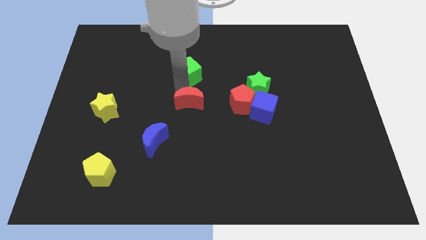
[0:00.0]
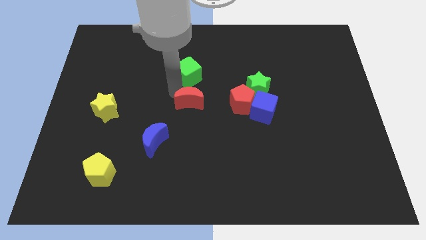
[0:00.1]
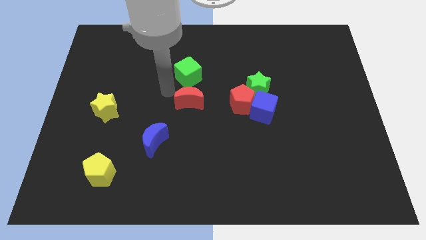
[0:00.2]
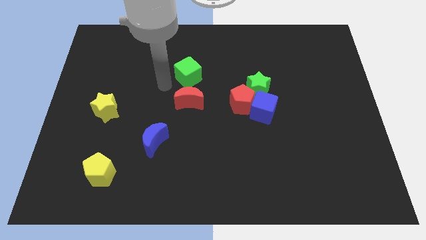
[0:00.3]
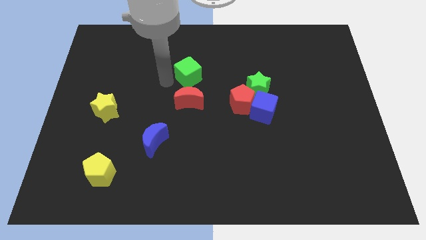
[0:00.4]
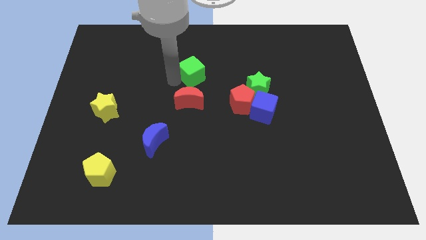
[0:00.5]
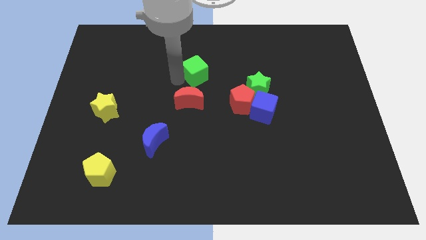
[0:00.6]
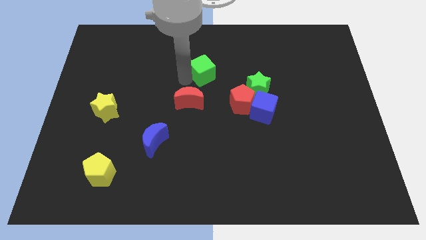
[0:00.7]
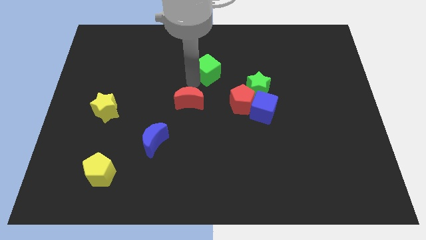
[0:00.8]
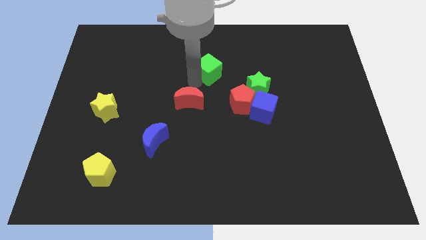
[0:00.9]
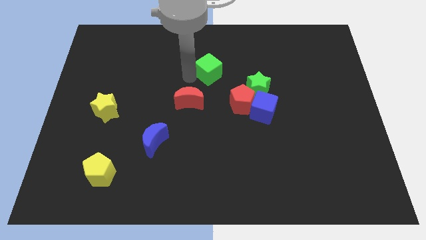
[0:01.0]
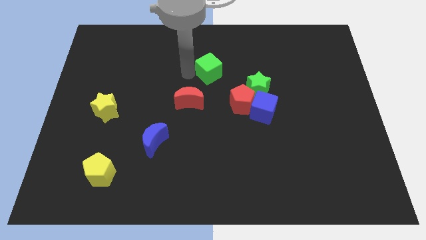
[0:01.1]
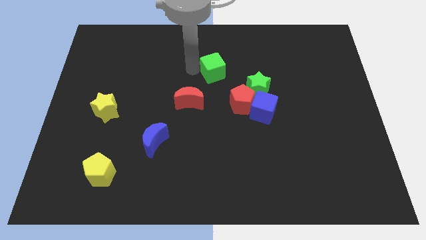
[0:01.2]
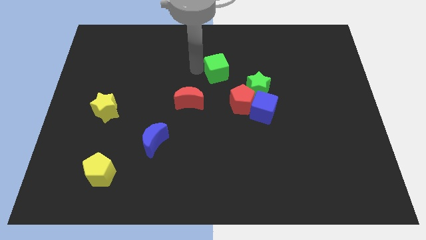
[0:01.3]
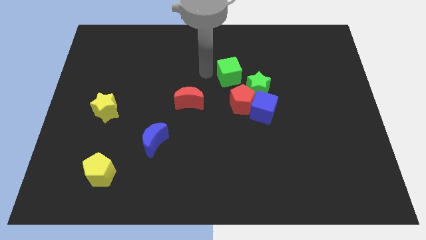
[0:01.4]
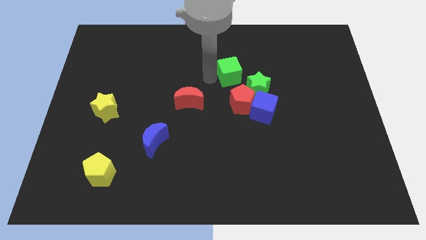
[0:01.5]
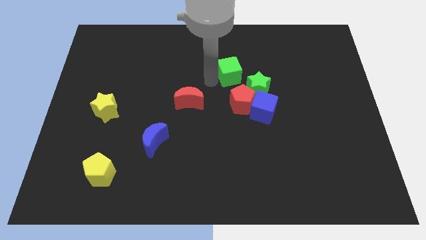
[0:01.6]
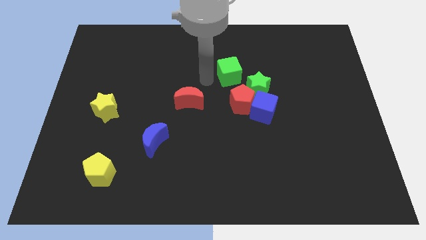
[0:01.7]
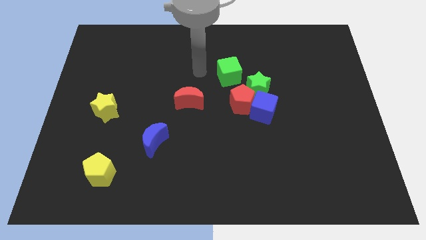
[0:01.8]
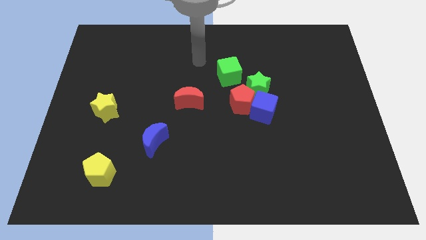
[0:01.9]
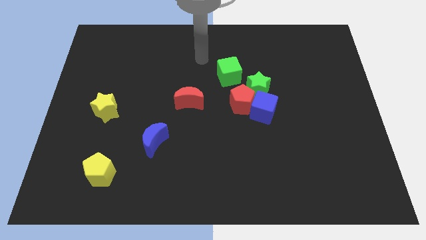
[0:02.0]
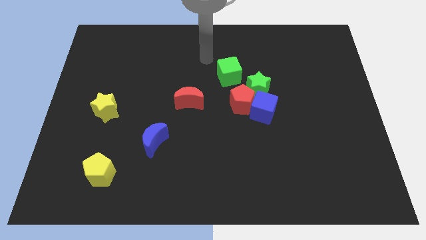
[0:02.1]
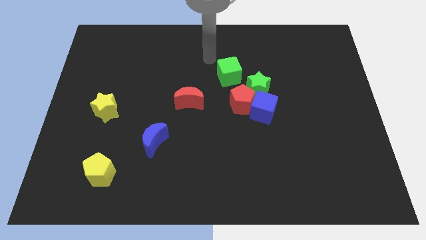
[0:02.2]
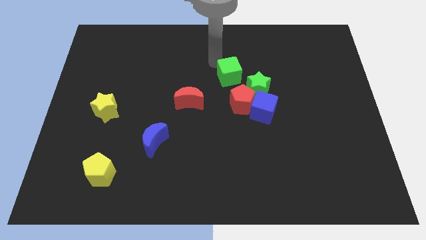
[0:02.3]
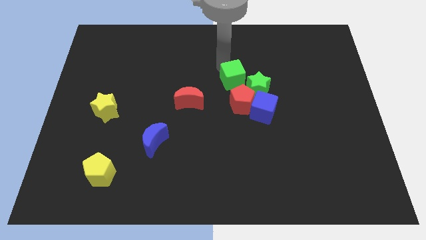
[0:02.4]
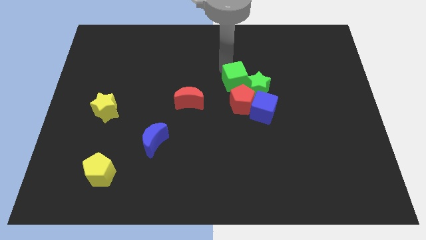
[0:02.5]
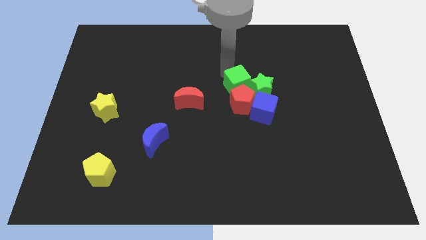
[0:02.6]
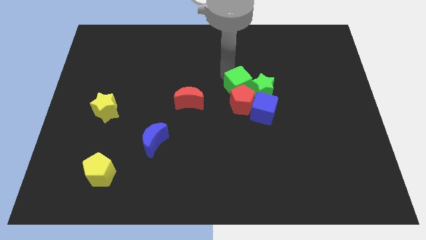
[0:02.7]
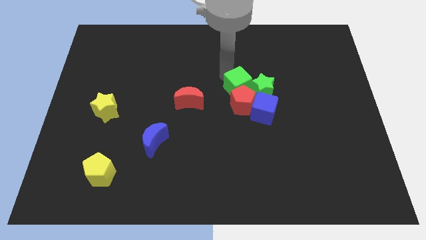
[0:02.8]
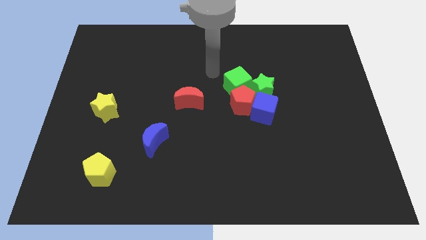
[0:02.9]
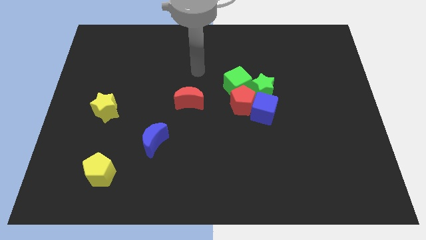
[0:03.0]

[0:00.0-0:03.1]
push the green cube into the group of blocks

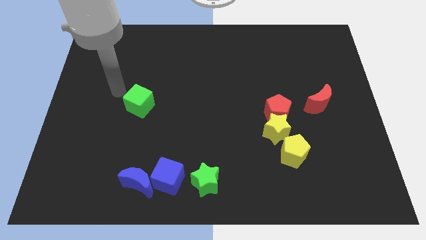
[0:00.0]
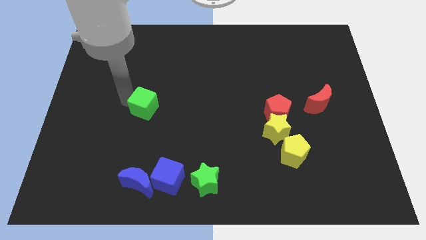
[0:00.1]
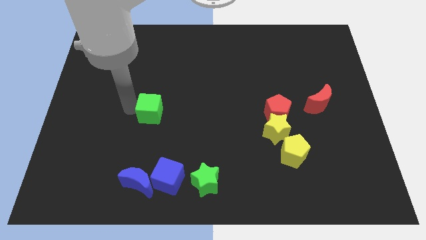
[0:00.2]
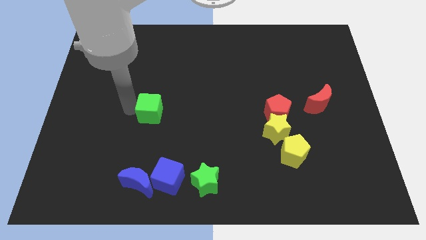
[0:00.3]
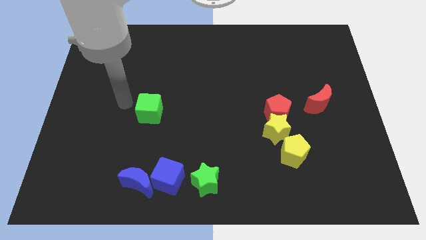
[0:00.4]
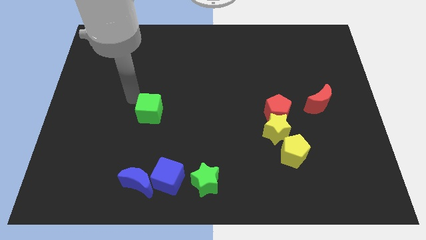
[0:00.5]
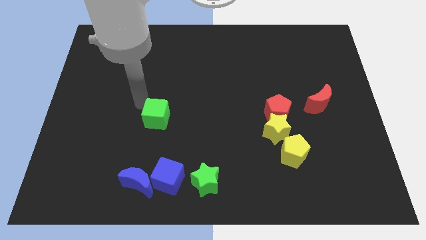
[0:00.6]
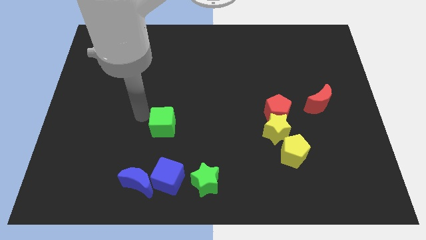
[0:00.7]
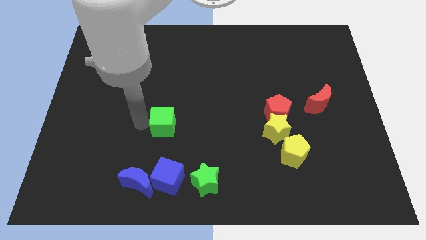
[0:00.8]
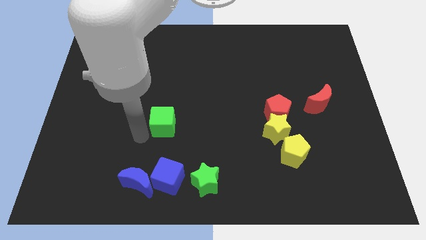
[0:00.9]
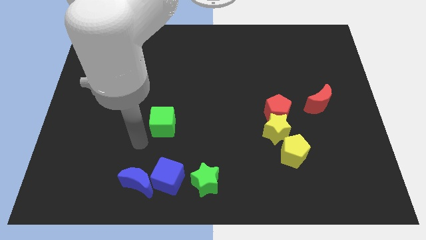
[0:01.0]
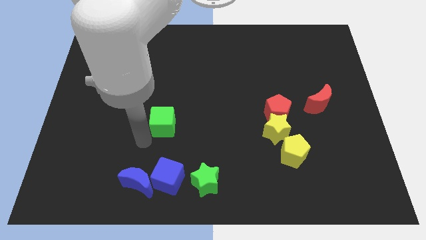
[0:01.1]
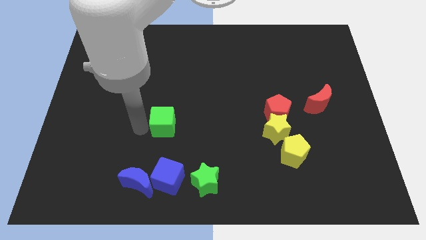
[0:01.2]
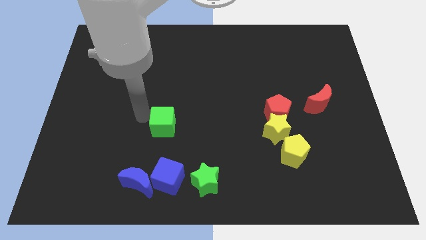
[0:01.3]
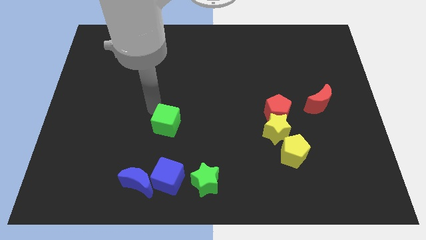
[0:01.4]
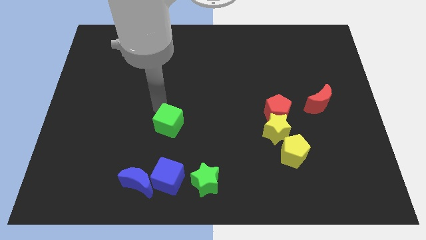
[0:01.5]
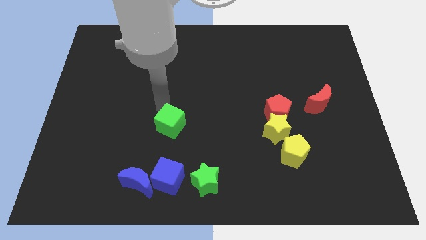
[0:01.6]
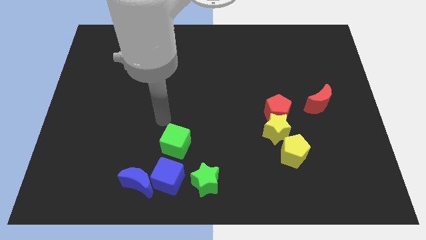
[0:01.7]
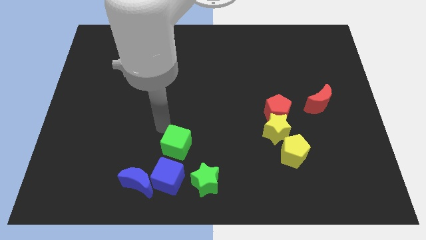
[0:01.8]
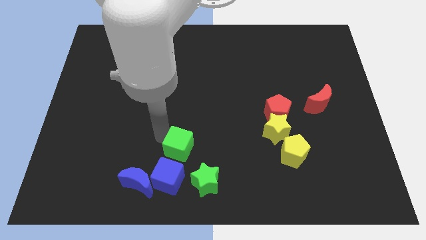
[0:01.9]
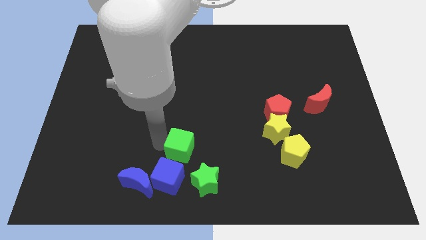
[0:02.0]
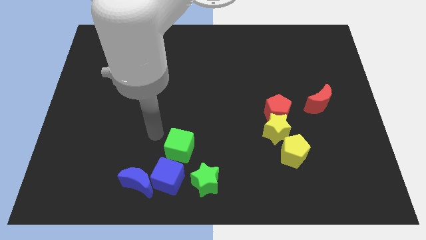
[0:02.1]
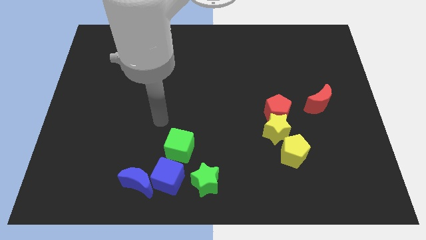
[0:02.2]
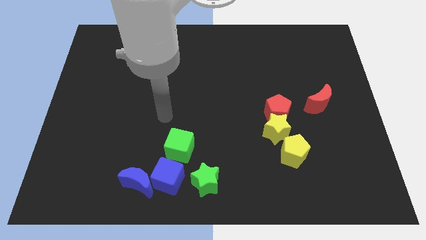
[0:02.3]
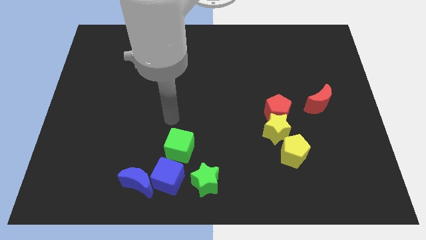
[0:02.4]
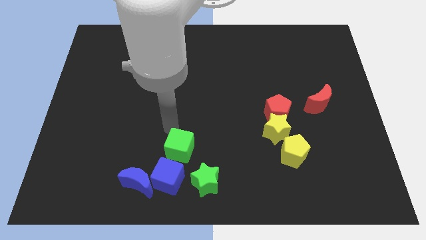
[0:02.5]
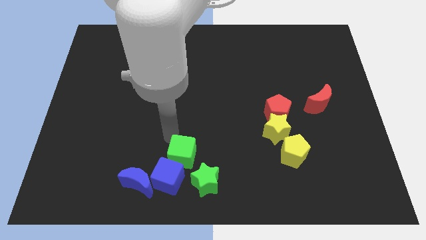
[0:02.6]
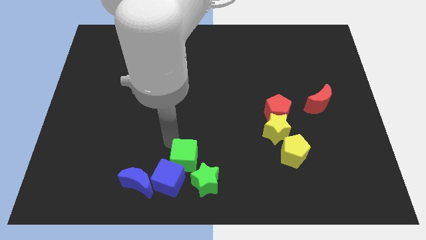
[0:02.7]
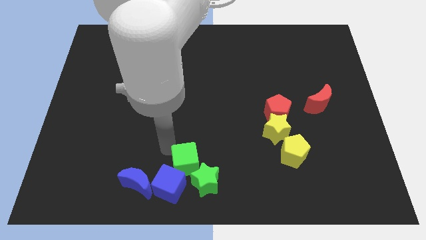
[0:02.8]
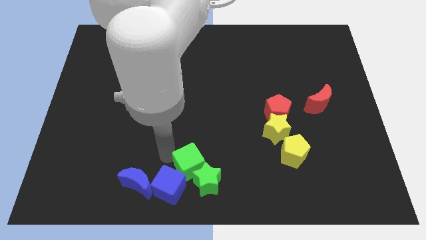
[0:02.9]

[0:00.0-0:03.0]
push the green cube towards the green star

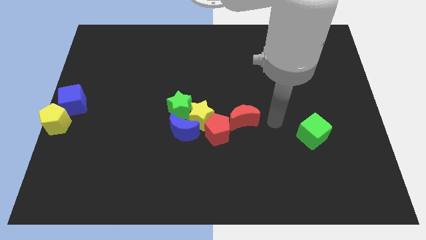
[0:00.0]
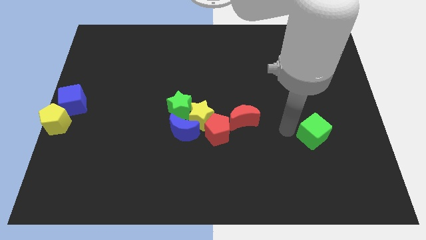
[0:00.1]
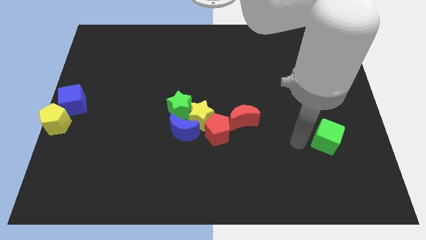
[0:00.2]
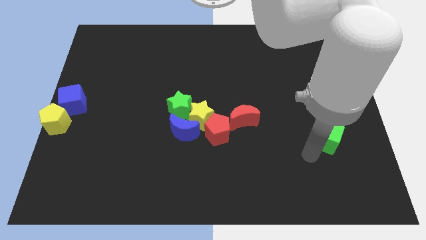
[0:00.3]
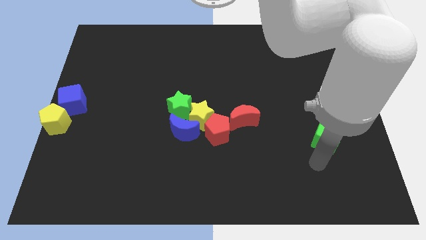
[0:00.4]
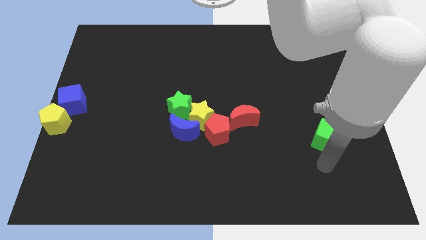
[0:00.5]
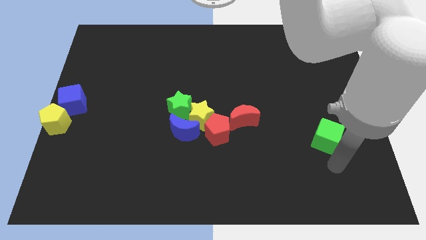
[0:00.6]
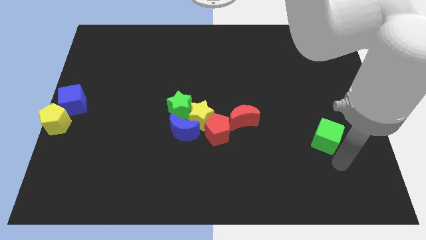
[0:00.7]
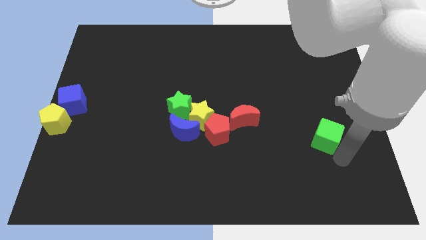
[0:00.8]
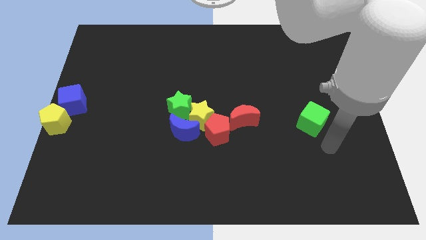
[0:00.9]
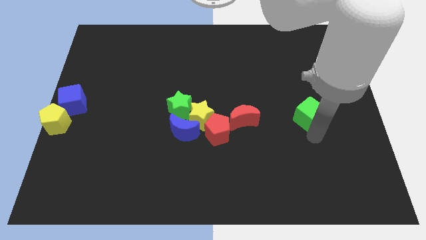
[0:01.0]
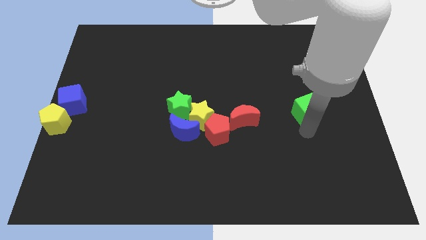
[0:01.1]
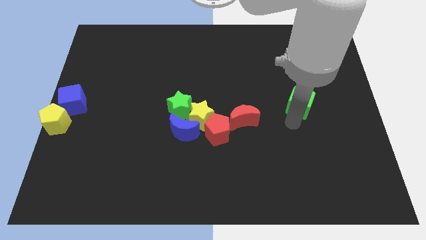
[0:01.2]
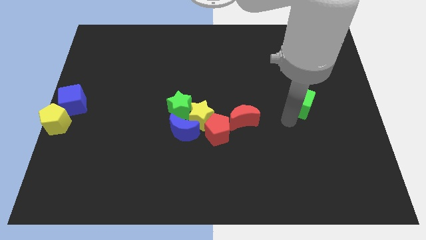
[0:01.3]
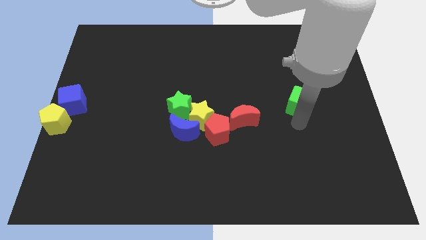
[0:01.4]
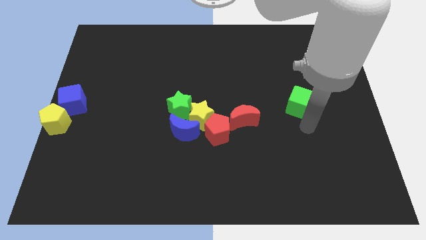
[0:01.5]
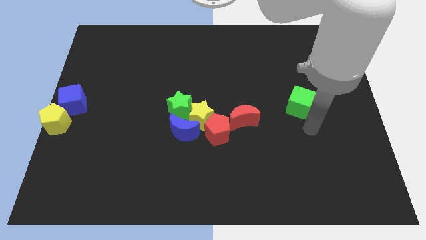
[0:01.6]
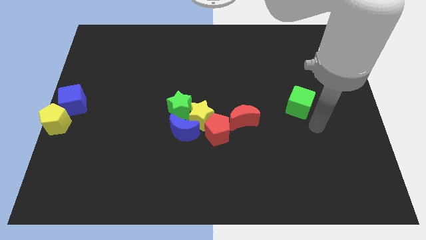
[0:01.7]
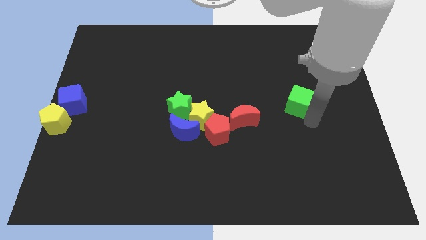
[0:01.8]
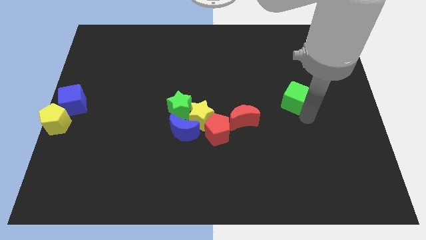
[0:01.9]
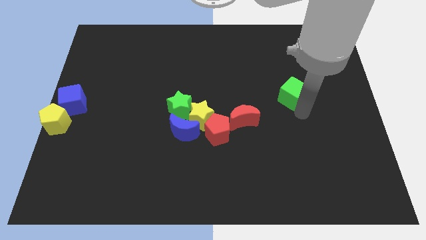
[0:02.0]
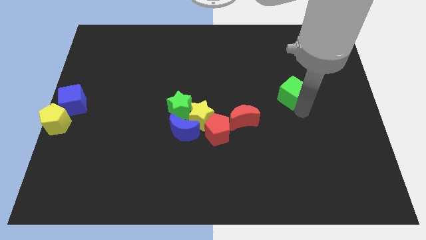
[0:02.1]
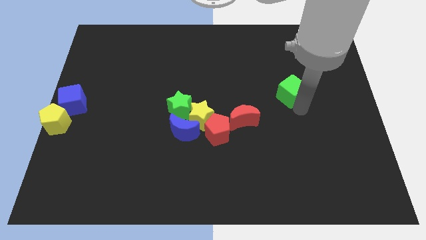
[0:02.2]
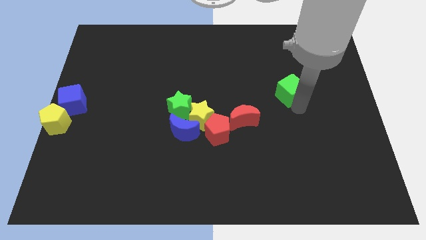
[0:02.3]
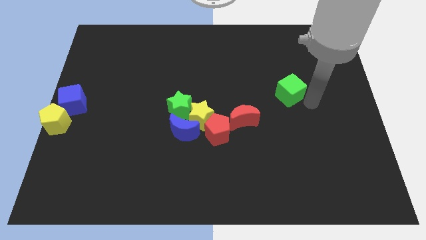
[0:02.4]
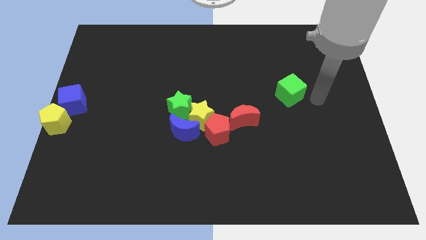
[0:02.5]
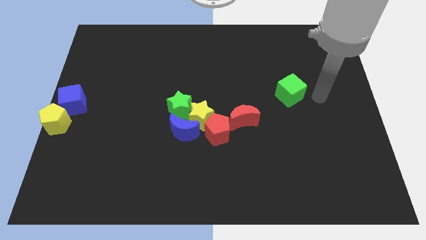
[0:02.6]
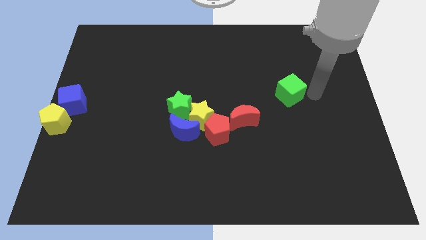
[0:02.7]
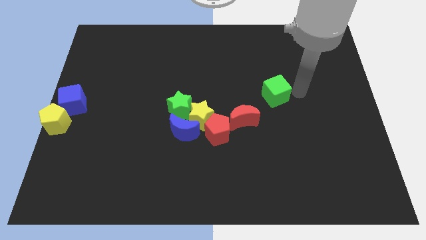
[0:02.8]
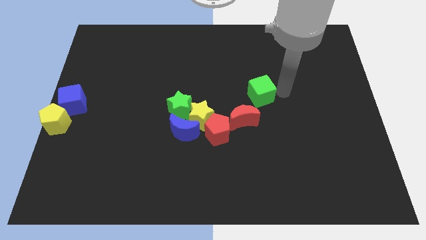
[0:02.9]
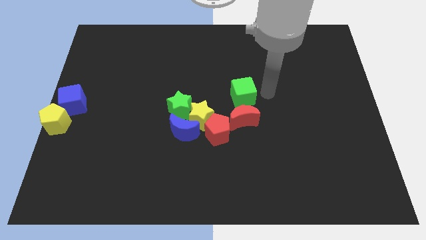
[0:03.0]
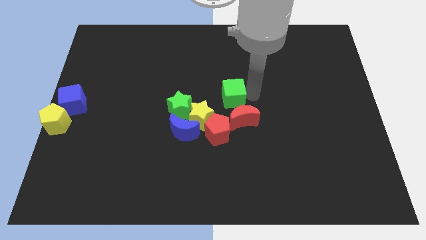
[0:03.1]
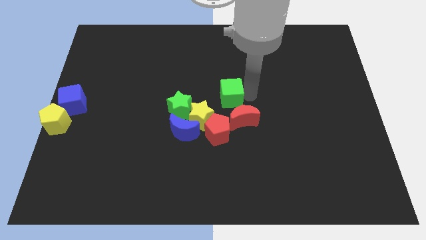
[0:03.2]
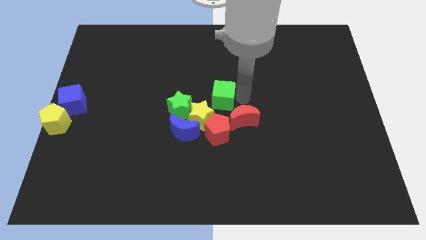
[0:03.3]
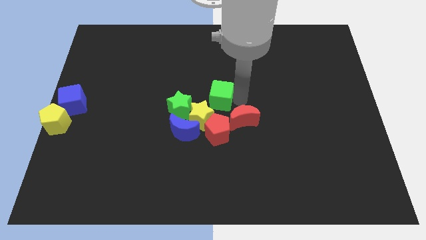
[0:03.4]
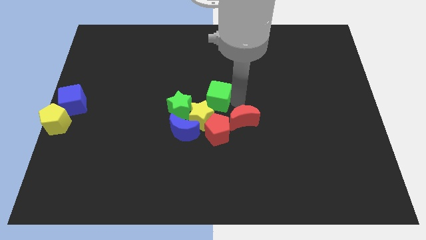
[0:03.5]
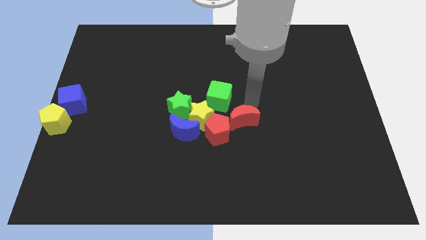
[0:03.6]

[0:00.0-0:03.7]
push the green cube towards yellow star
